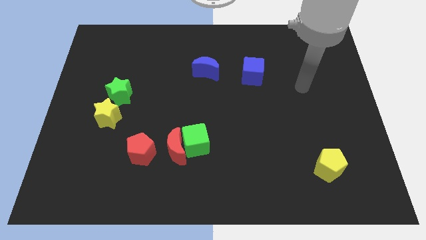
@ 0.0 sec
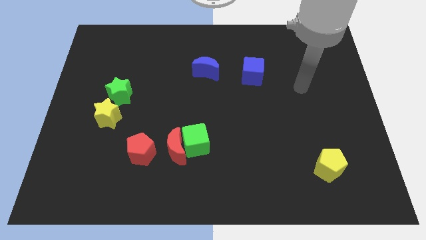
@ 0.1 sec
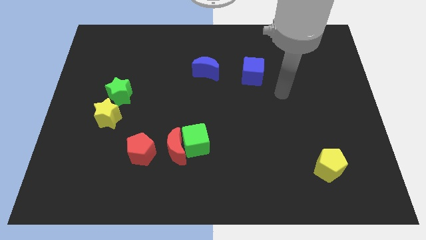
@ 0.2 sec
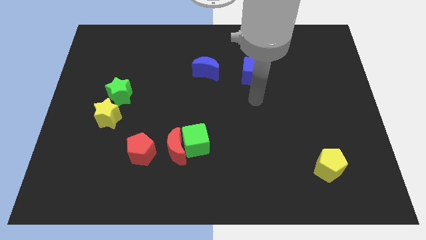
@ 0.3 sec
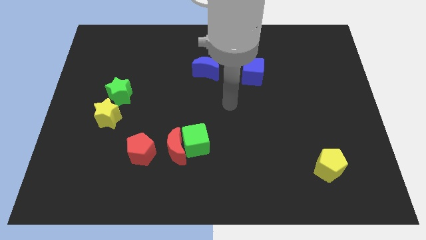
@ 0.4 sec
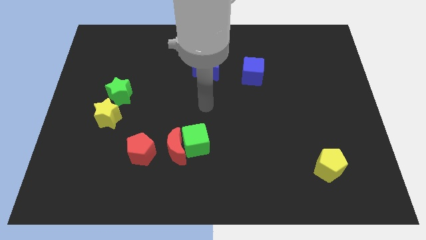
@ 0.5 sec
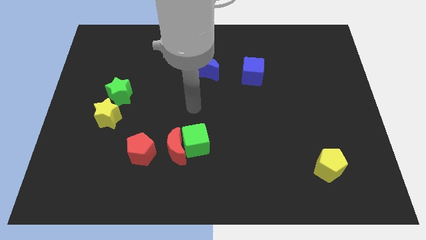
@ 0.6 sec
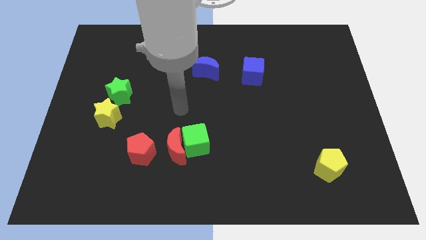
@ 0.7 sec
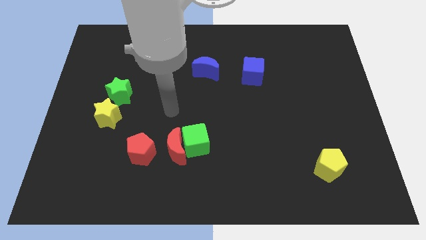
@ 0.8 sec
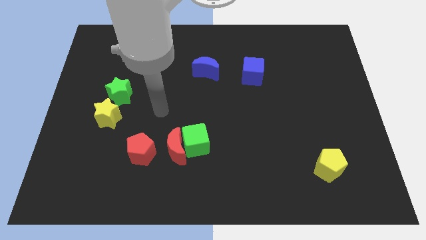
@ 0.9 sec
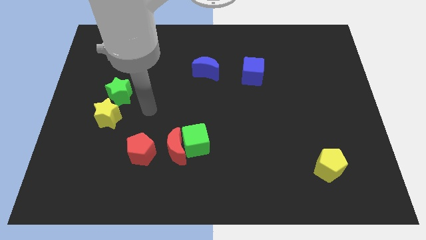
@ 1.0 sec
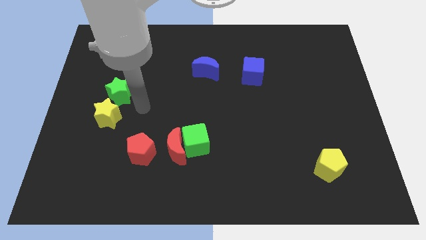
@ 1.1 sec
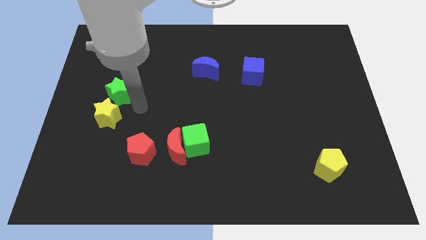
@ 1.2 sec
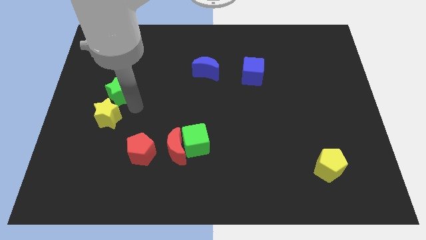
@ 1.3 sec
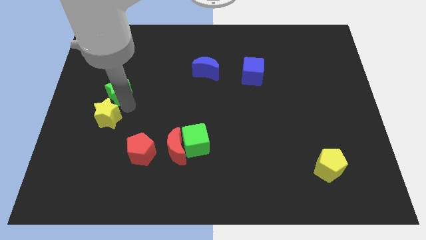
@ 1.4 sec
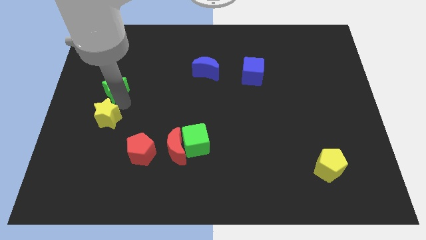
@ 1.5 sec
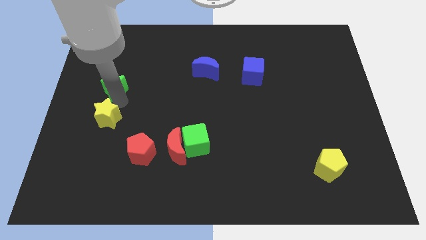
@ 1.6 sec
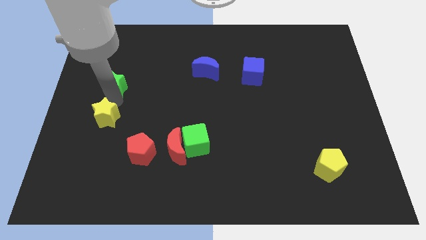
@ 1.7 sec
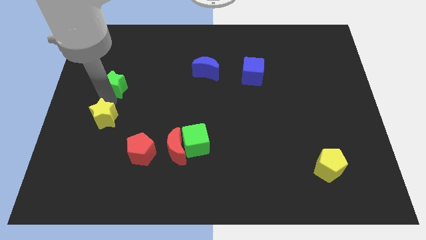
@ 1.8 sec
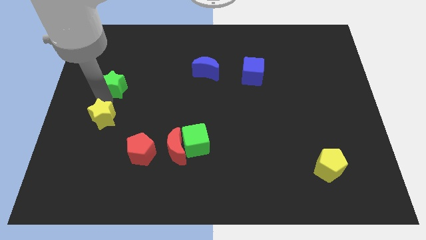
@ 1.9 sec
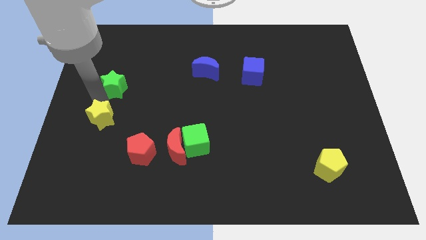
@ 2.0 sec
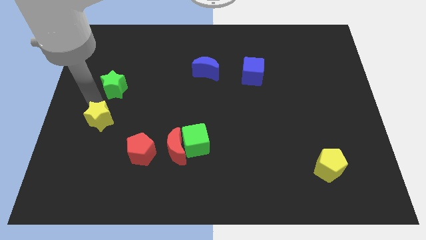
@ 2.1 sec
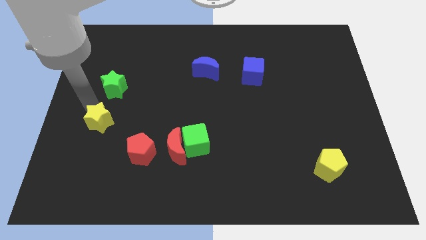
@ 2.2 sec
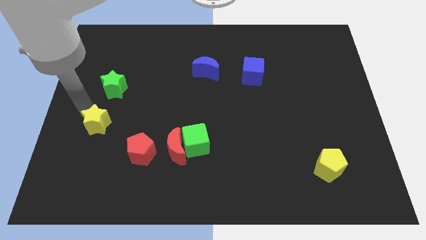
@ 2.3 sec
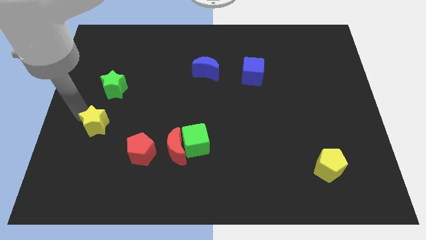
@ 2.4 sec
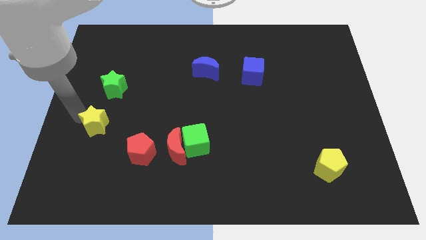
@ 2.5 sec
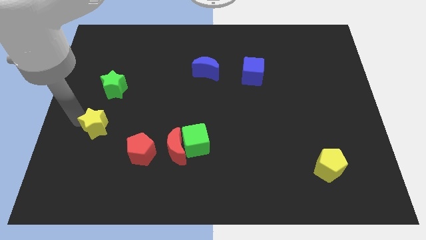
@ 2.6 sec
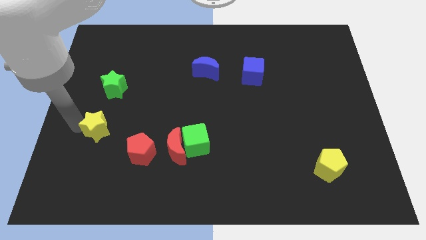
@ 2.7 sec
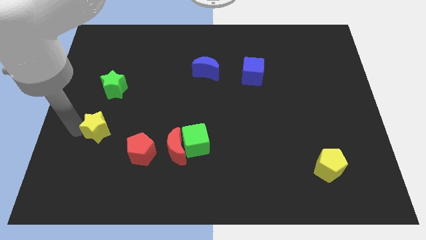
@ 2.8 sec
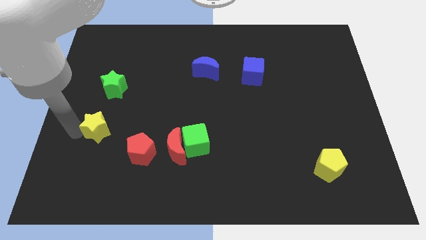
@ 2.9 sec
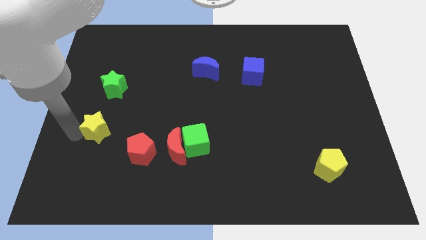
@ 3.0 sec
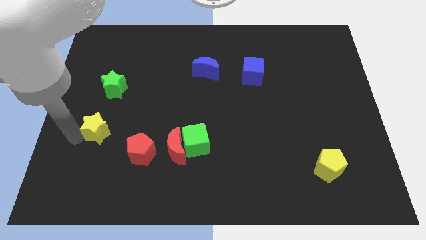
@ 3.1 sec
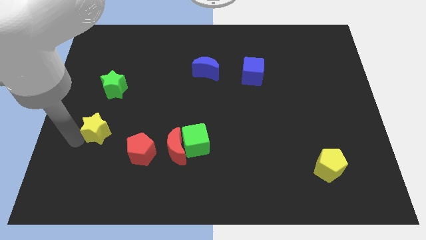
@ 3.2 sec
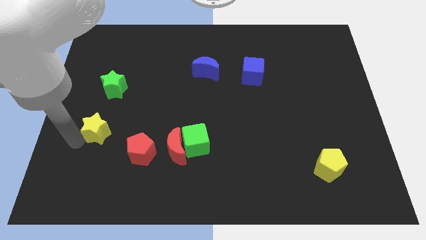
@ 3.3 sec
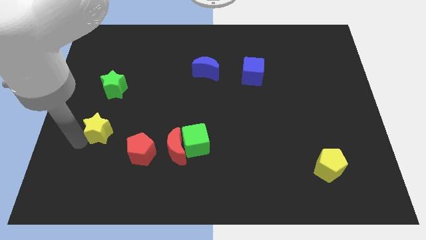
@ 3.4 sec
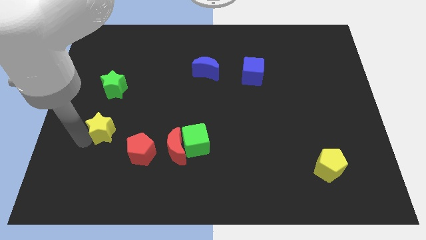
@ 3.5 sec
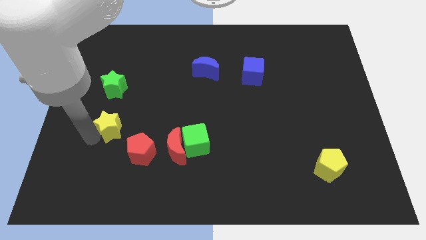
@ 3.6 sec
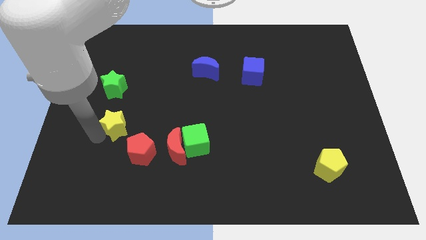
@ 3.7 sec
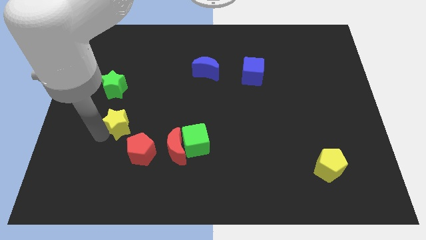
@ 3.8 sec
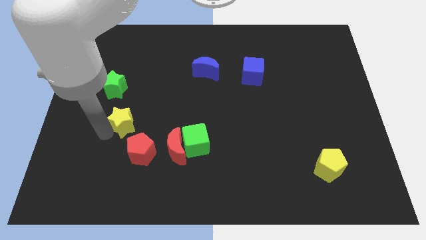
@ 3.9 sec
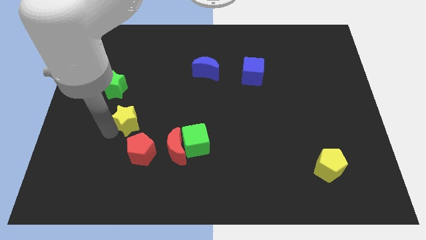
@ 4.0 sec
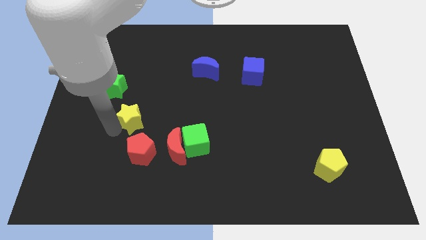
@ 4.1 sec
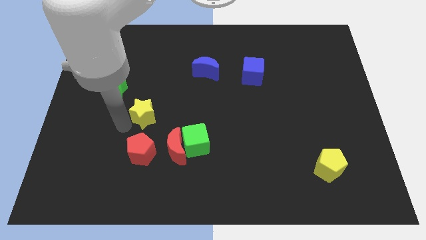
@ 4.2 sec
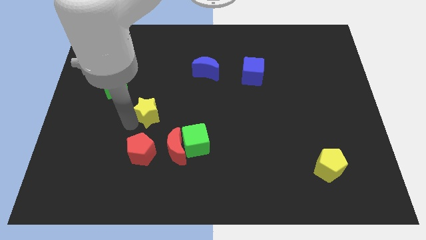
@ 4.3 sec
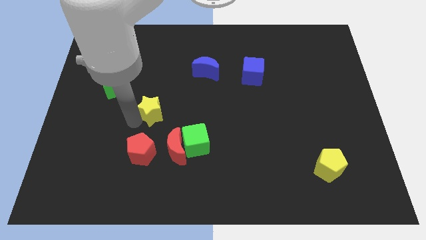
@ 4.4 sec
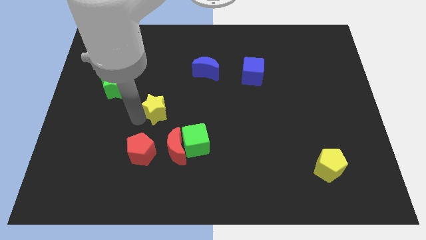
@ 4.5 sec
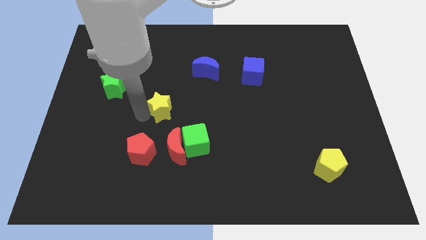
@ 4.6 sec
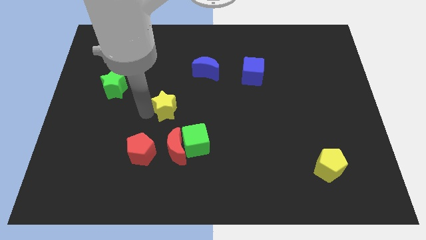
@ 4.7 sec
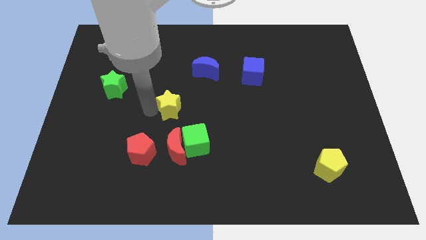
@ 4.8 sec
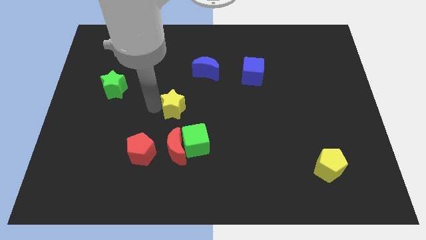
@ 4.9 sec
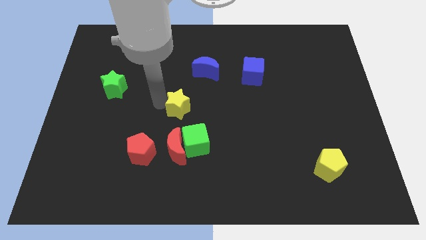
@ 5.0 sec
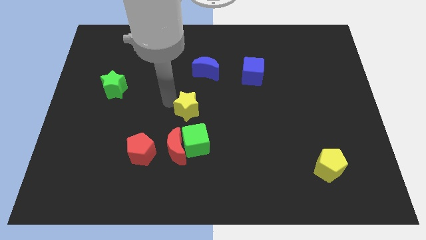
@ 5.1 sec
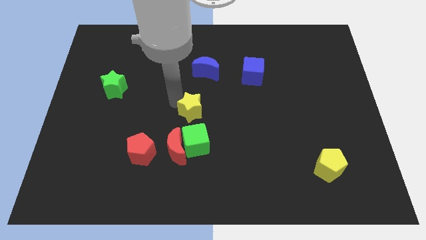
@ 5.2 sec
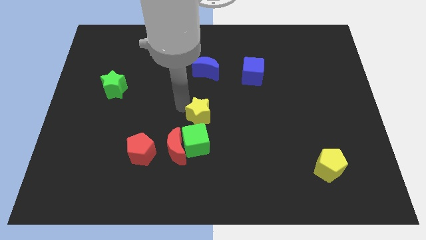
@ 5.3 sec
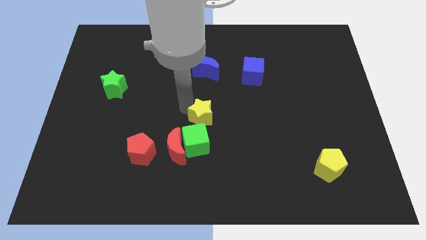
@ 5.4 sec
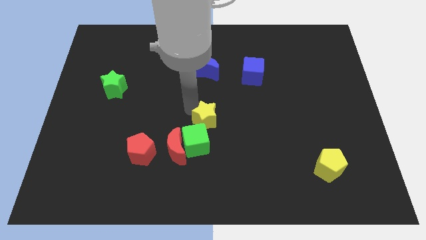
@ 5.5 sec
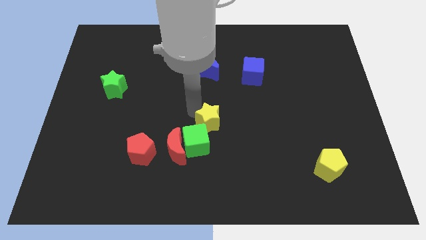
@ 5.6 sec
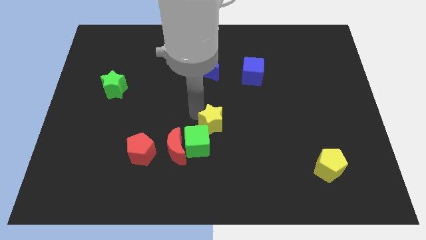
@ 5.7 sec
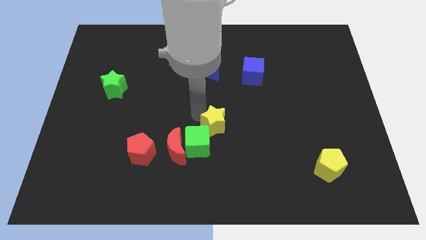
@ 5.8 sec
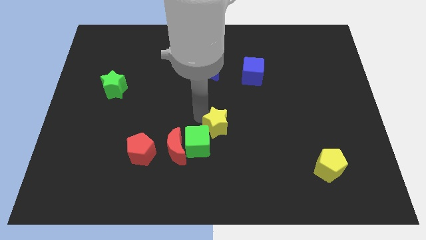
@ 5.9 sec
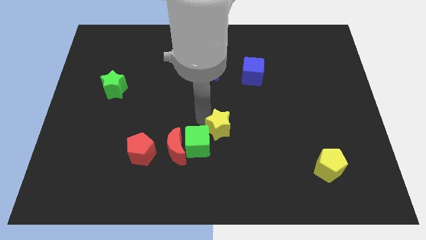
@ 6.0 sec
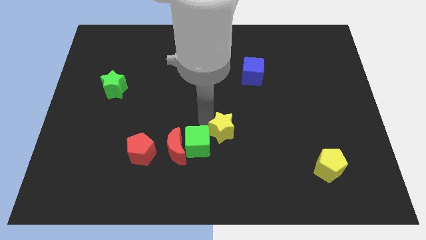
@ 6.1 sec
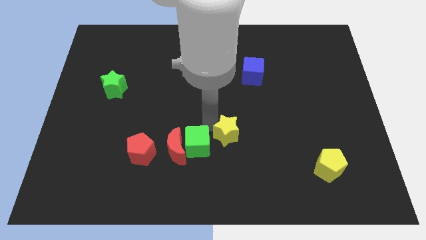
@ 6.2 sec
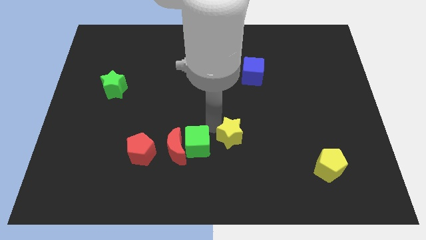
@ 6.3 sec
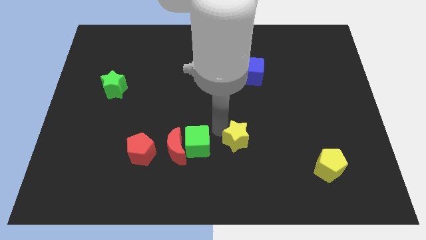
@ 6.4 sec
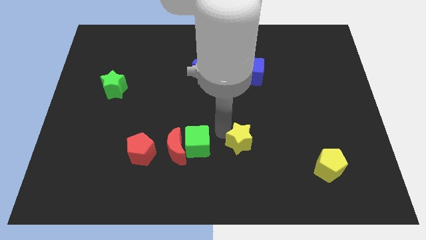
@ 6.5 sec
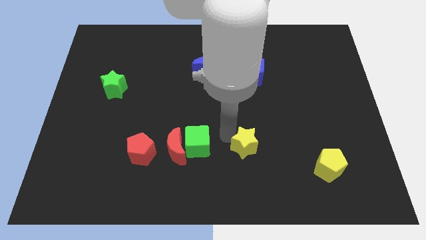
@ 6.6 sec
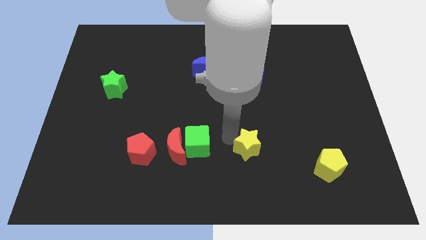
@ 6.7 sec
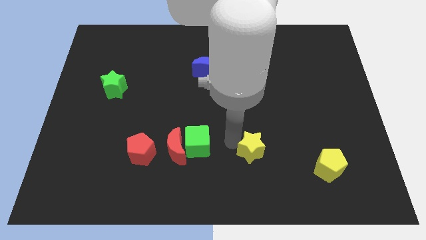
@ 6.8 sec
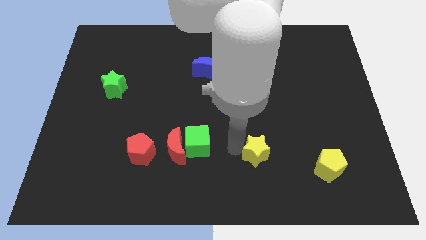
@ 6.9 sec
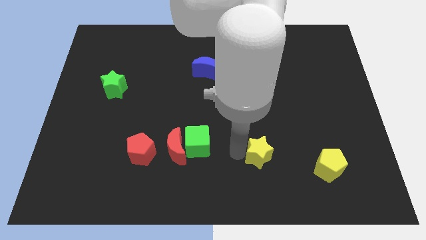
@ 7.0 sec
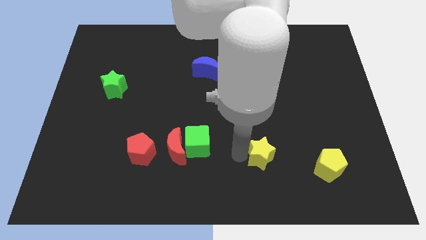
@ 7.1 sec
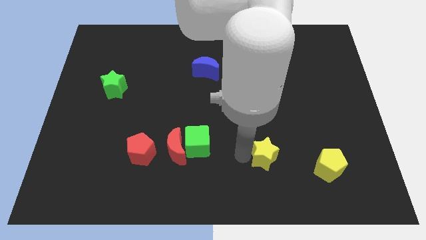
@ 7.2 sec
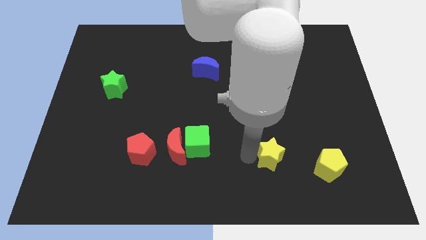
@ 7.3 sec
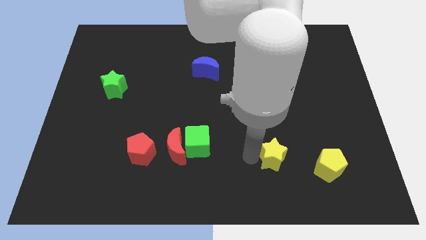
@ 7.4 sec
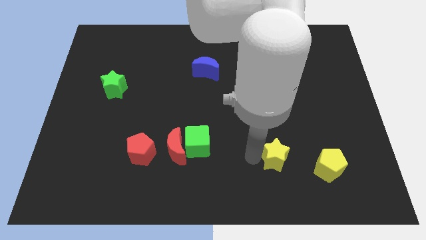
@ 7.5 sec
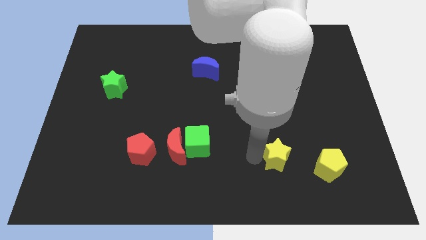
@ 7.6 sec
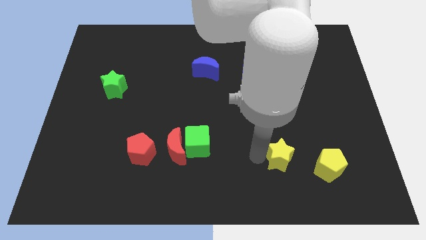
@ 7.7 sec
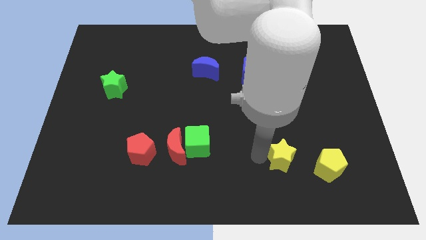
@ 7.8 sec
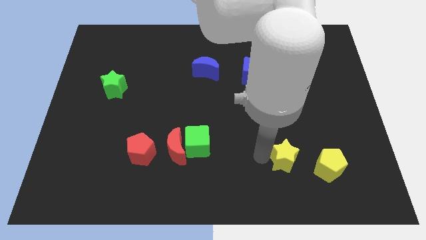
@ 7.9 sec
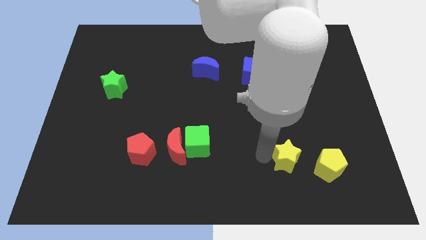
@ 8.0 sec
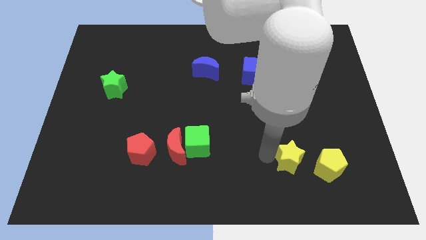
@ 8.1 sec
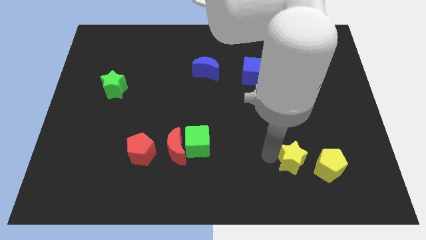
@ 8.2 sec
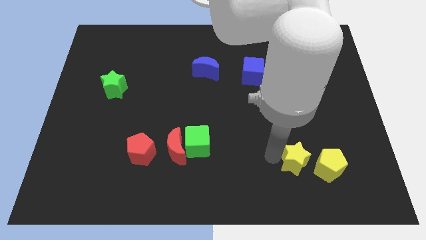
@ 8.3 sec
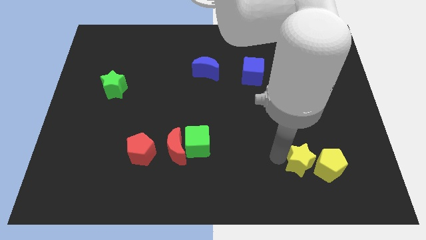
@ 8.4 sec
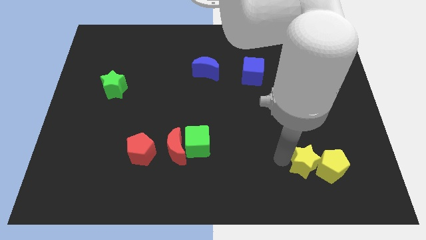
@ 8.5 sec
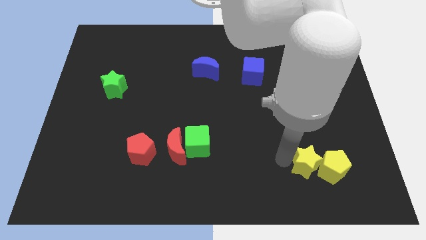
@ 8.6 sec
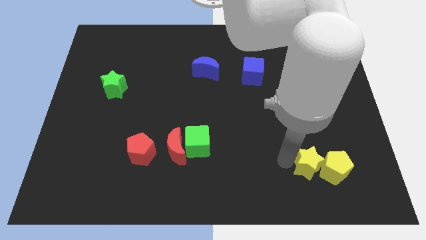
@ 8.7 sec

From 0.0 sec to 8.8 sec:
move the yellow star towards the yellow pentagon

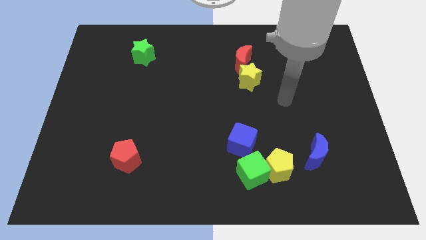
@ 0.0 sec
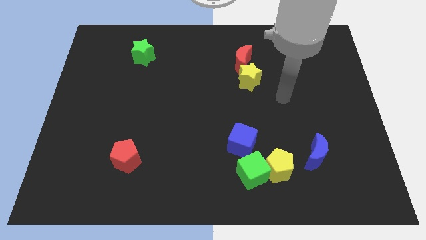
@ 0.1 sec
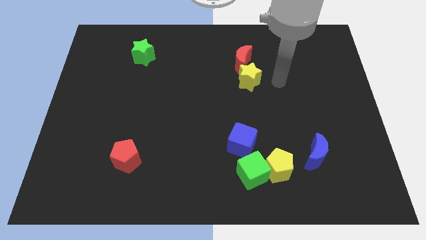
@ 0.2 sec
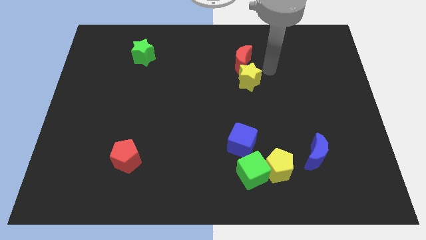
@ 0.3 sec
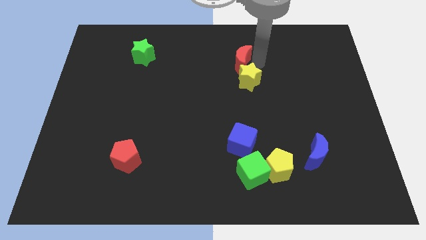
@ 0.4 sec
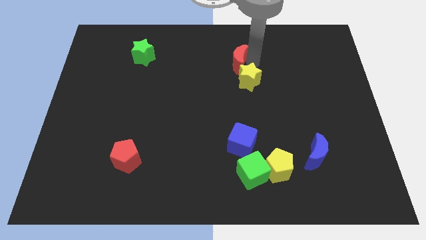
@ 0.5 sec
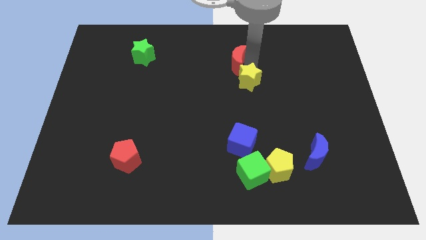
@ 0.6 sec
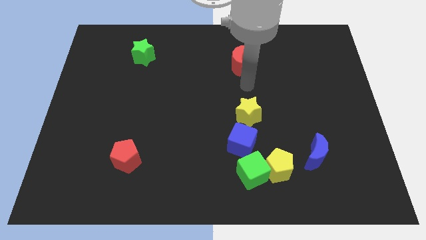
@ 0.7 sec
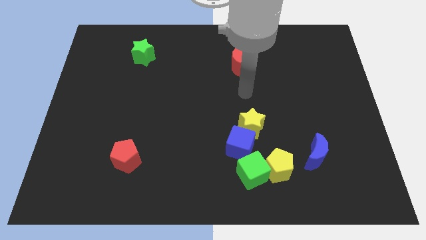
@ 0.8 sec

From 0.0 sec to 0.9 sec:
move the yellow star close to the blue cube
